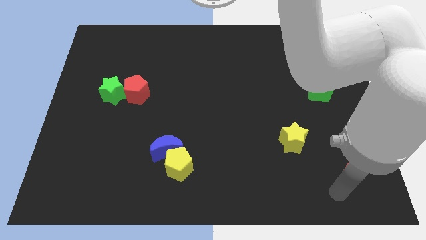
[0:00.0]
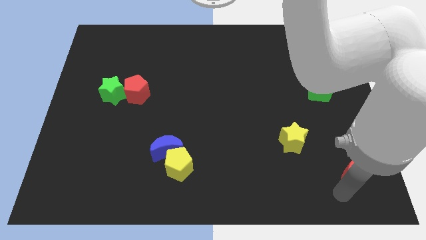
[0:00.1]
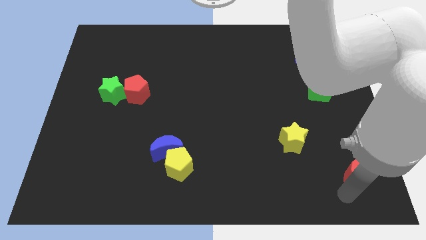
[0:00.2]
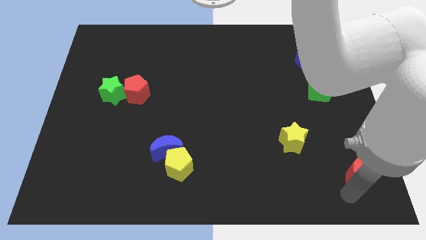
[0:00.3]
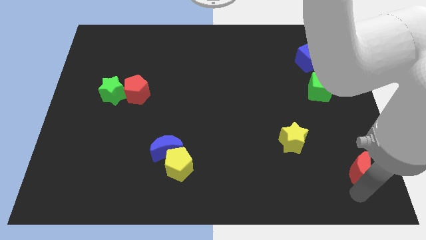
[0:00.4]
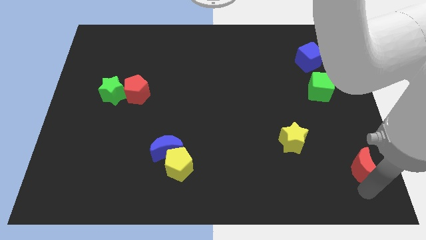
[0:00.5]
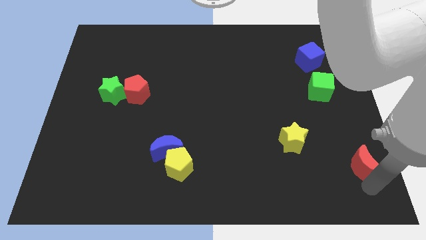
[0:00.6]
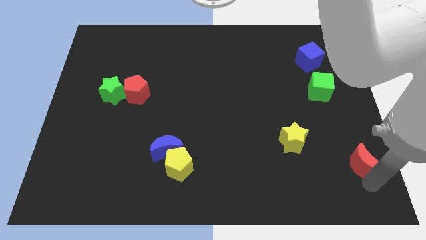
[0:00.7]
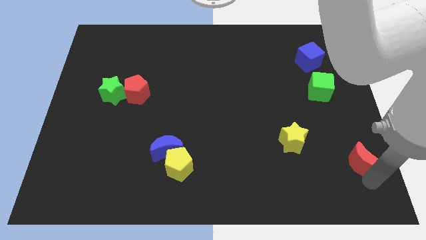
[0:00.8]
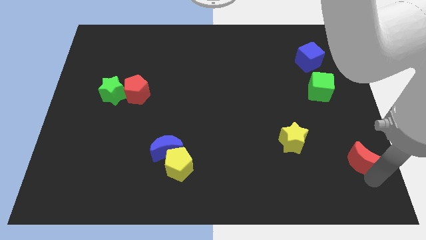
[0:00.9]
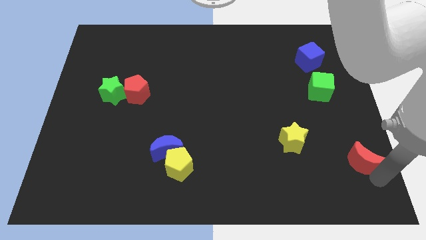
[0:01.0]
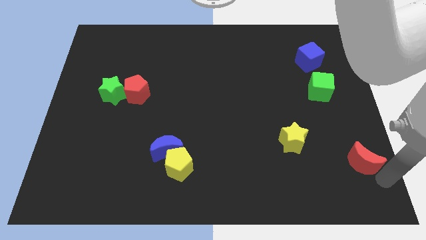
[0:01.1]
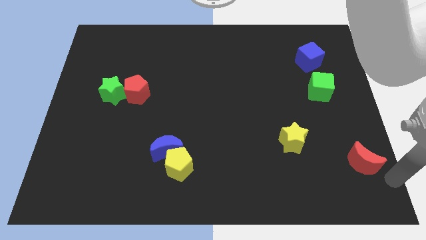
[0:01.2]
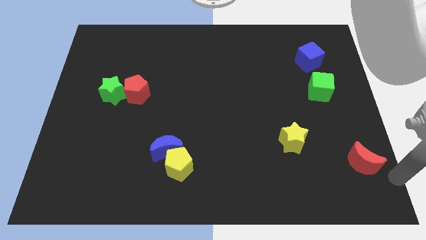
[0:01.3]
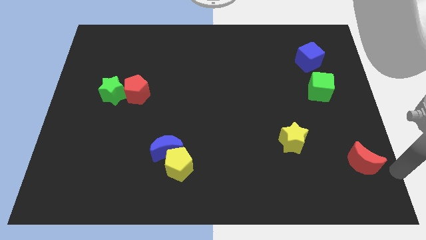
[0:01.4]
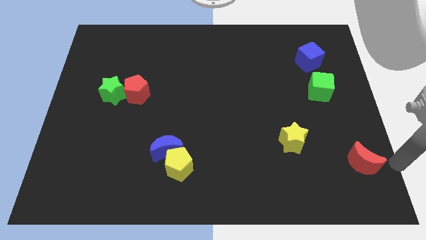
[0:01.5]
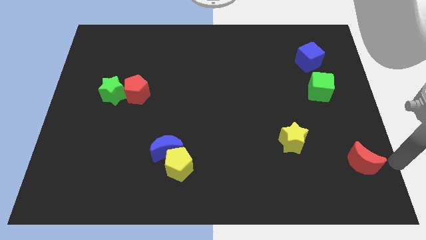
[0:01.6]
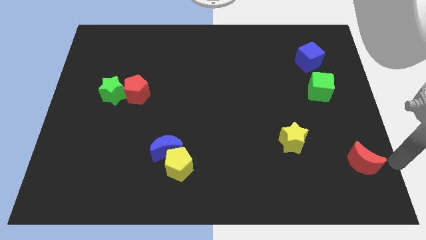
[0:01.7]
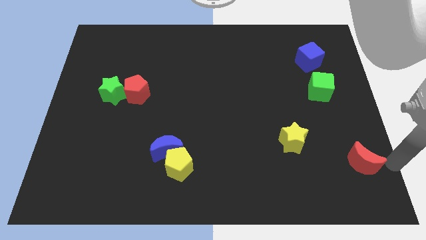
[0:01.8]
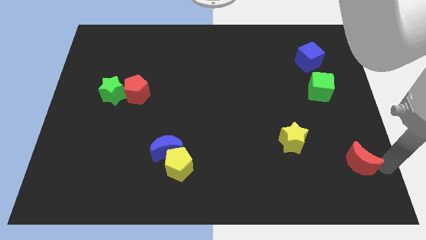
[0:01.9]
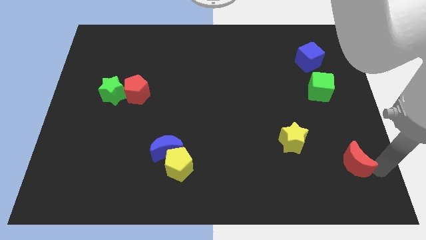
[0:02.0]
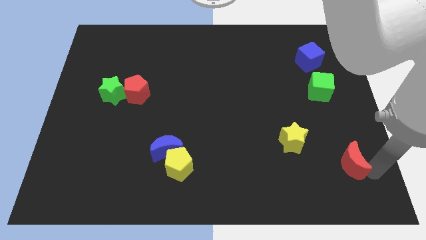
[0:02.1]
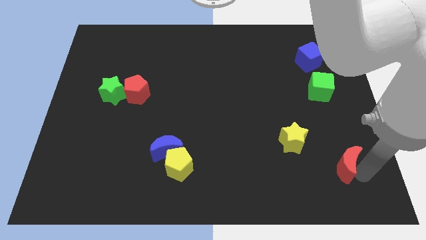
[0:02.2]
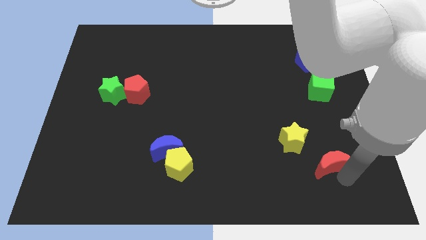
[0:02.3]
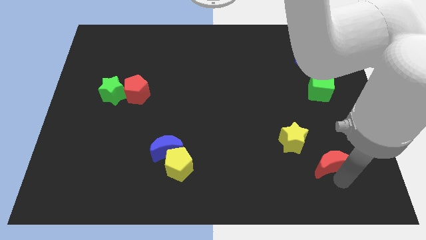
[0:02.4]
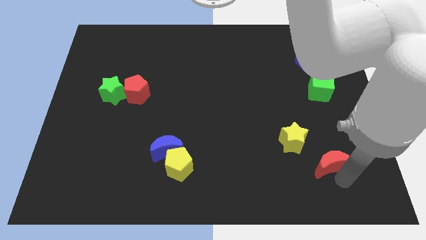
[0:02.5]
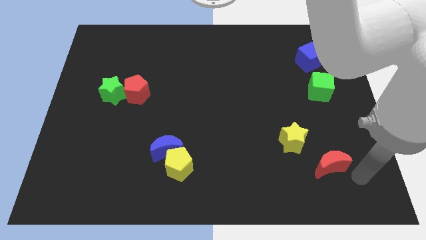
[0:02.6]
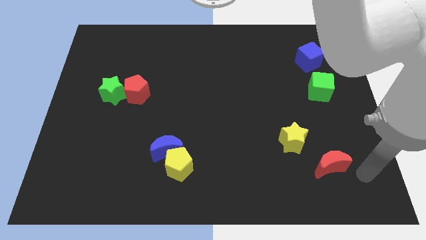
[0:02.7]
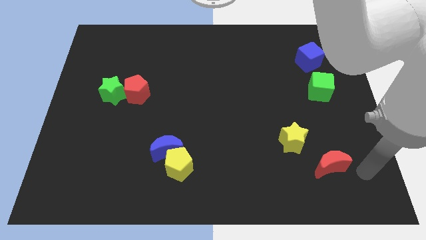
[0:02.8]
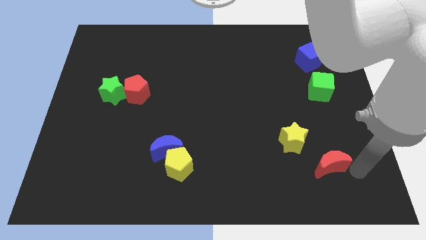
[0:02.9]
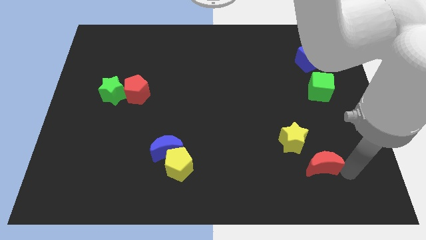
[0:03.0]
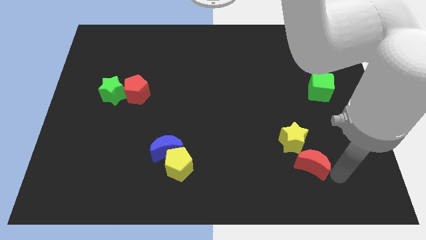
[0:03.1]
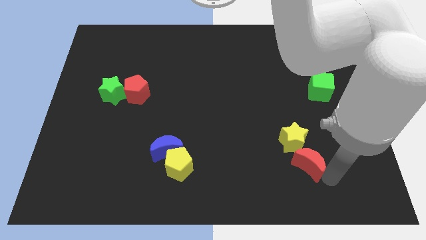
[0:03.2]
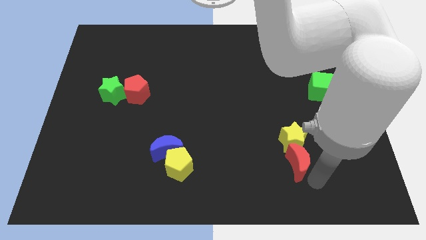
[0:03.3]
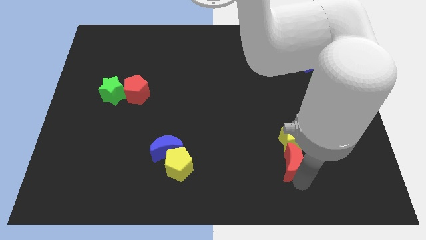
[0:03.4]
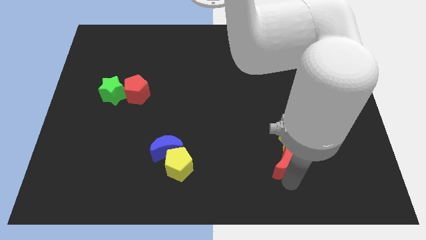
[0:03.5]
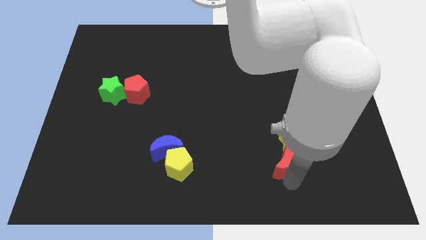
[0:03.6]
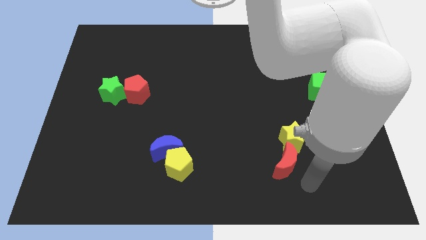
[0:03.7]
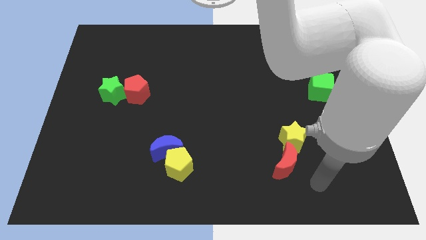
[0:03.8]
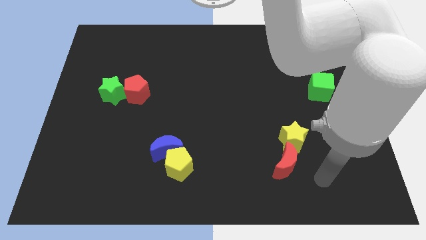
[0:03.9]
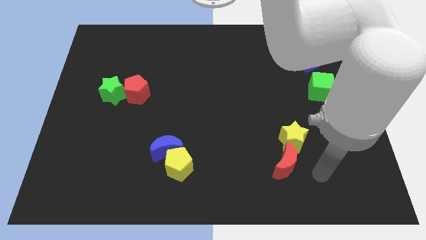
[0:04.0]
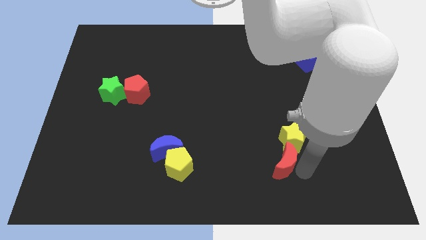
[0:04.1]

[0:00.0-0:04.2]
move red moon below yellow star

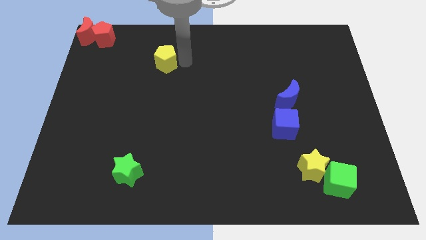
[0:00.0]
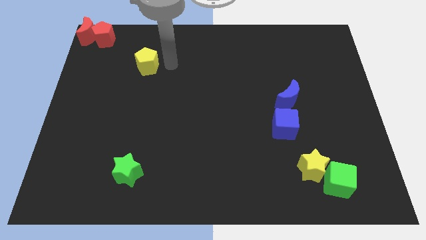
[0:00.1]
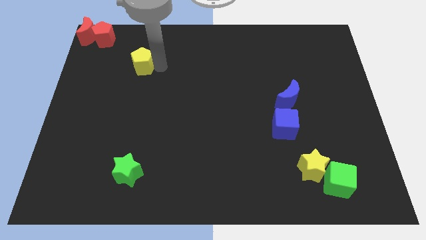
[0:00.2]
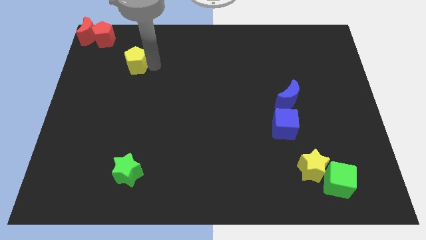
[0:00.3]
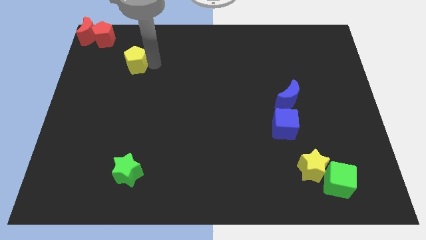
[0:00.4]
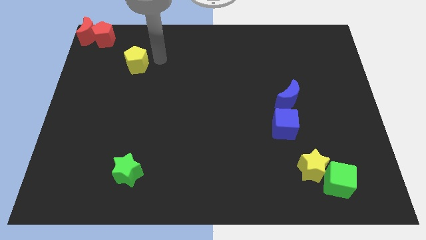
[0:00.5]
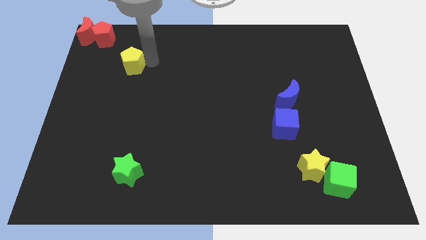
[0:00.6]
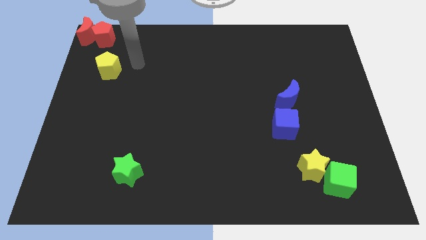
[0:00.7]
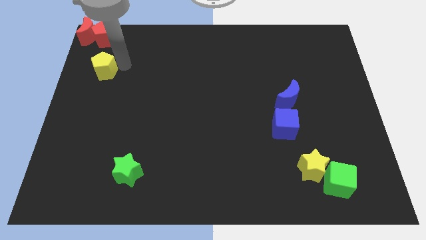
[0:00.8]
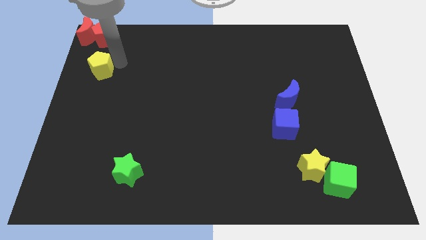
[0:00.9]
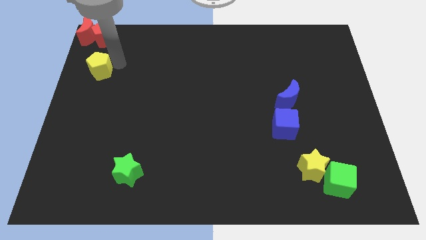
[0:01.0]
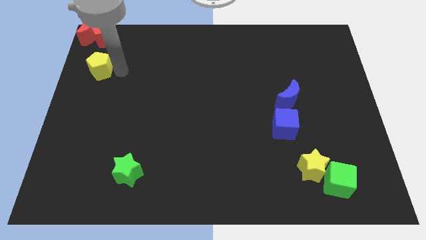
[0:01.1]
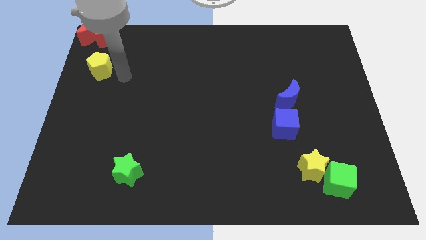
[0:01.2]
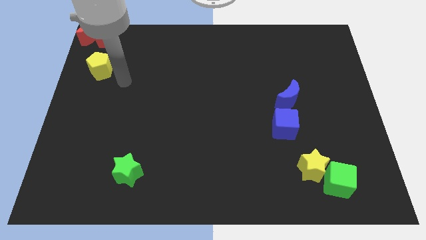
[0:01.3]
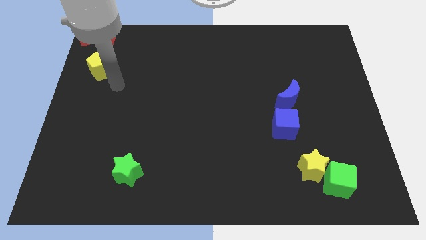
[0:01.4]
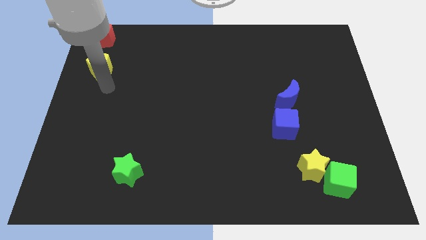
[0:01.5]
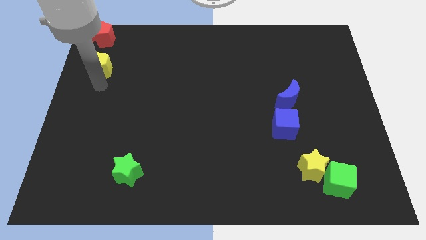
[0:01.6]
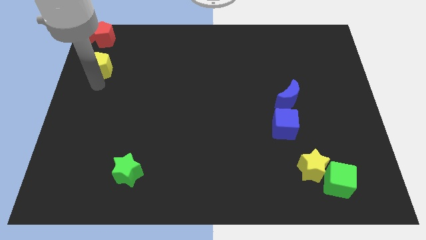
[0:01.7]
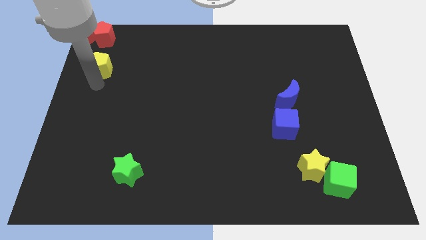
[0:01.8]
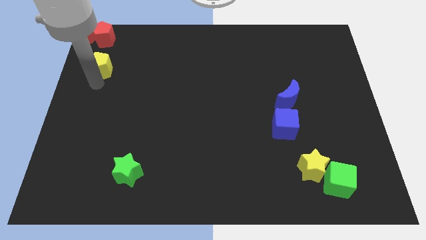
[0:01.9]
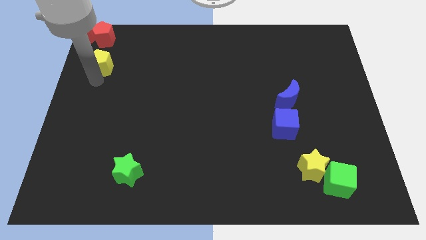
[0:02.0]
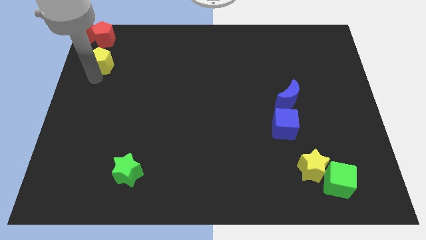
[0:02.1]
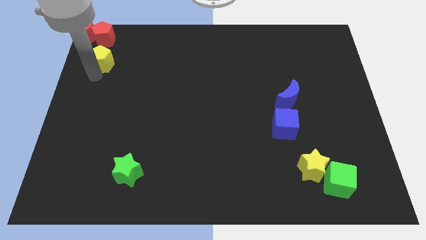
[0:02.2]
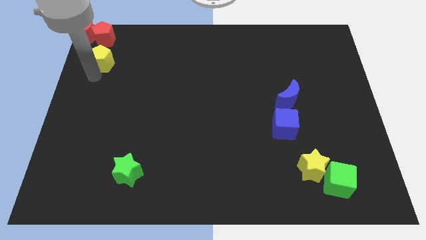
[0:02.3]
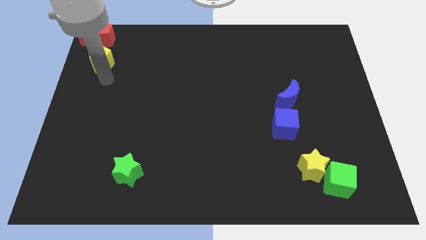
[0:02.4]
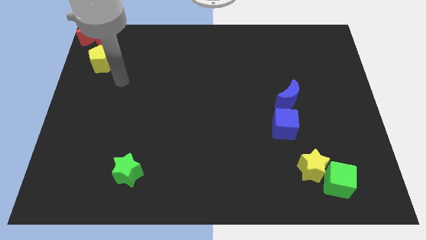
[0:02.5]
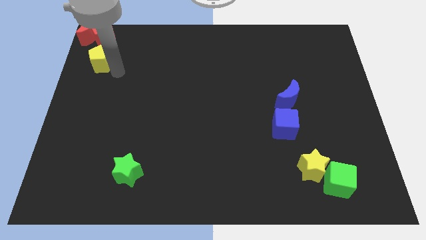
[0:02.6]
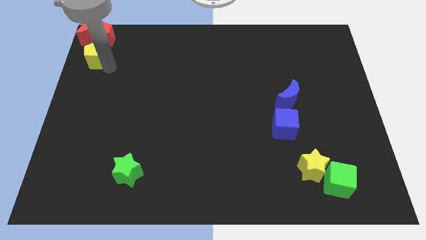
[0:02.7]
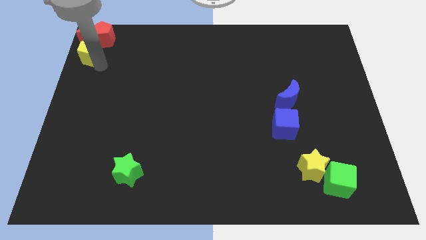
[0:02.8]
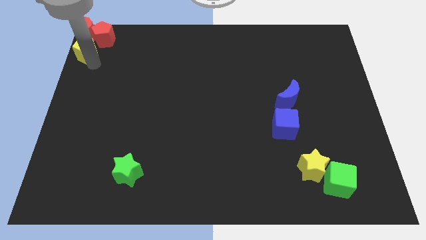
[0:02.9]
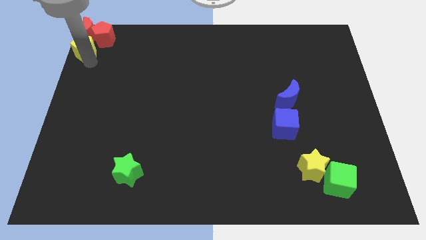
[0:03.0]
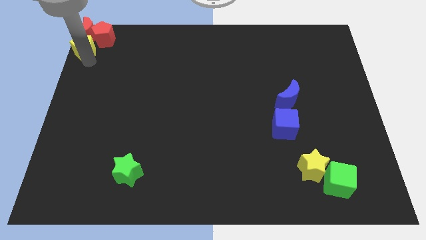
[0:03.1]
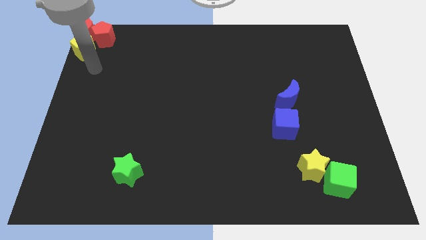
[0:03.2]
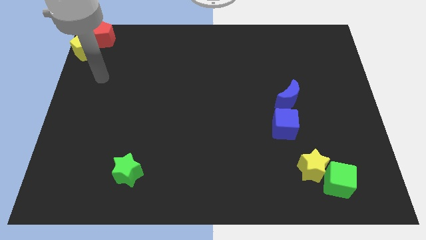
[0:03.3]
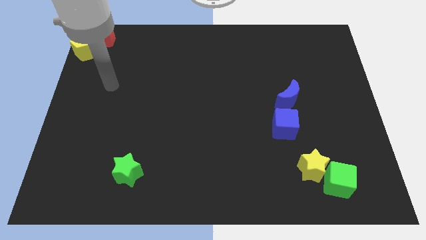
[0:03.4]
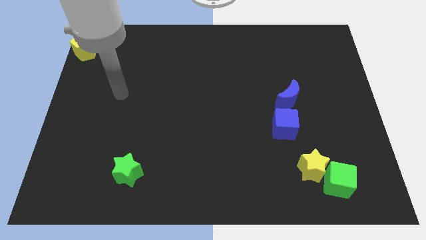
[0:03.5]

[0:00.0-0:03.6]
push the yellow pentagon below the red moon

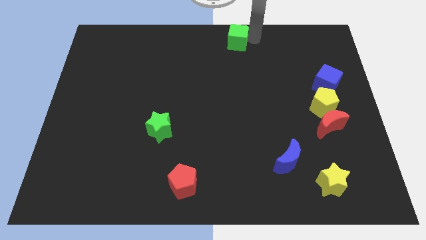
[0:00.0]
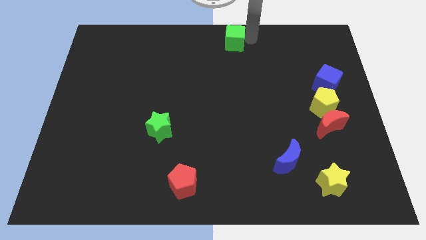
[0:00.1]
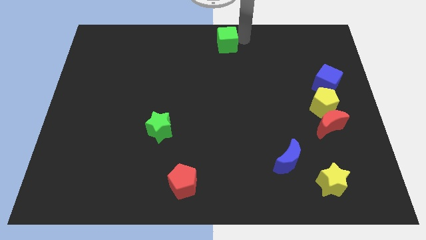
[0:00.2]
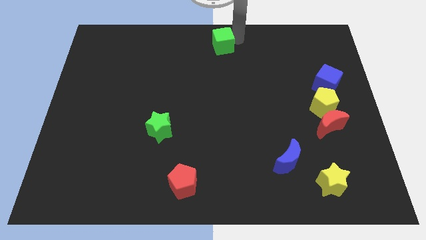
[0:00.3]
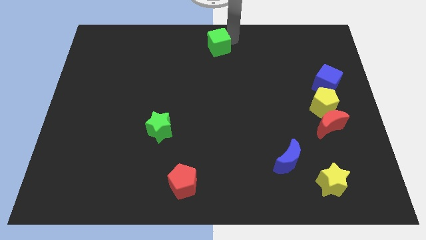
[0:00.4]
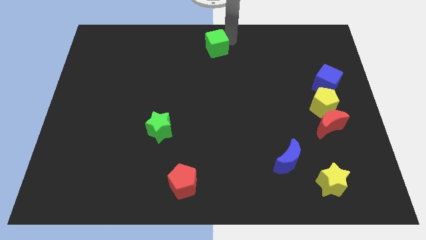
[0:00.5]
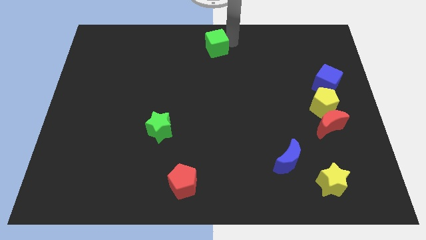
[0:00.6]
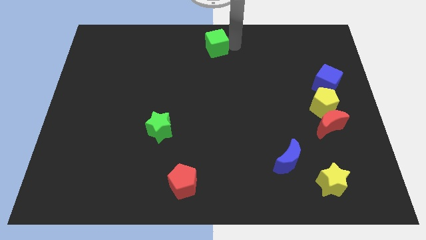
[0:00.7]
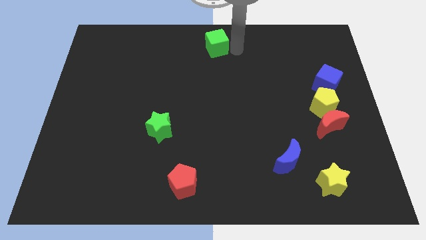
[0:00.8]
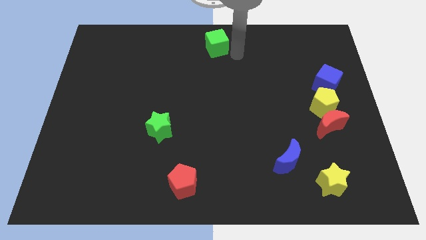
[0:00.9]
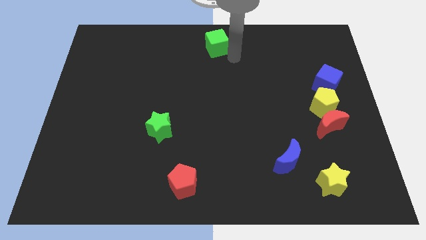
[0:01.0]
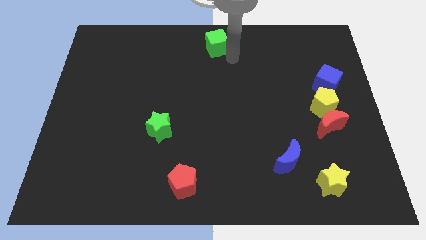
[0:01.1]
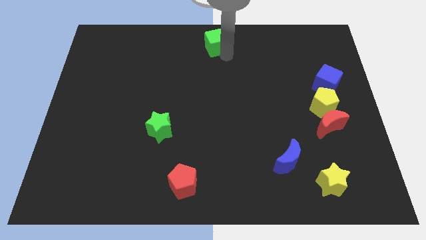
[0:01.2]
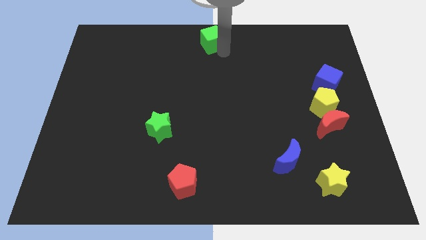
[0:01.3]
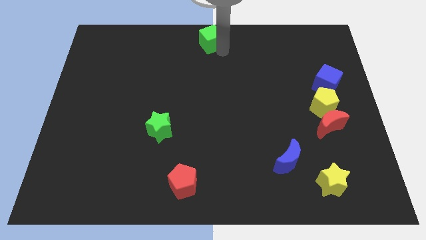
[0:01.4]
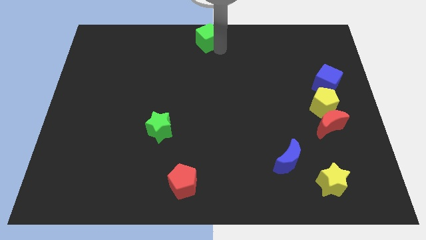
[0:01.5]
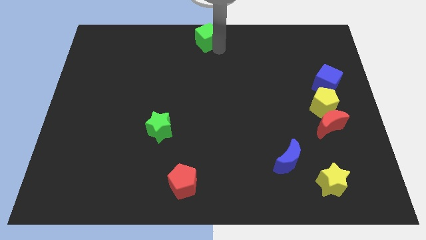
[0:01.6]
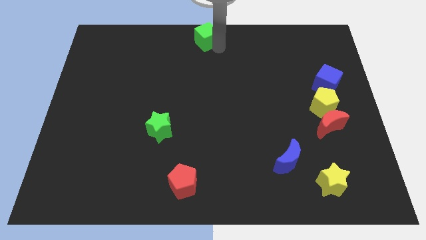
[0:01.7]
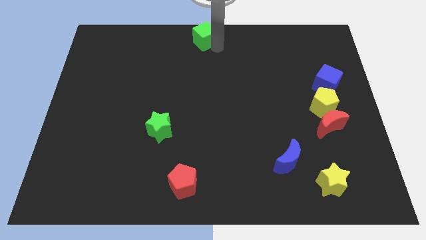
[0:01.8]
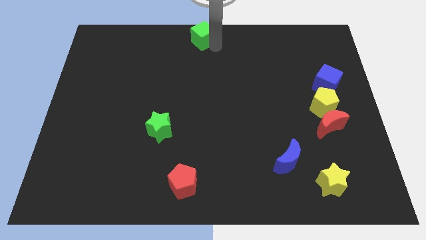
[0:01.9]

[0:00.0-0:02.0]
push the green cube to the top center of the board
